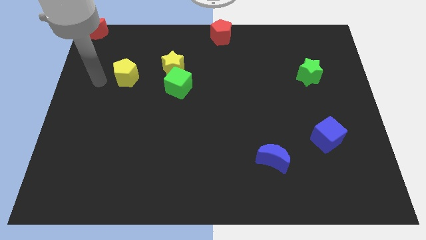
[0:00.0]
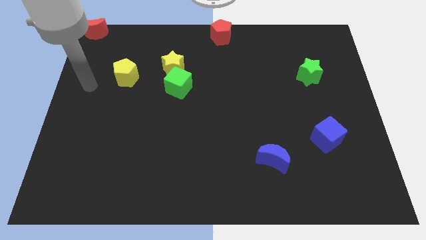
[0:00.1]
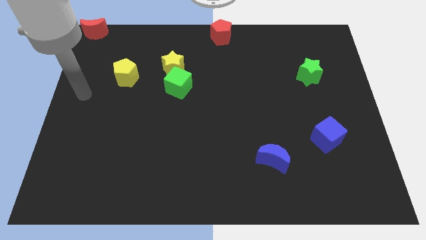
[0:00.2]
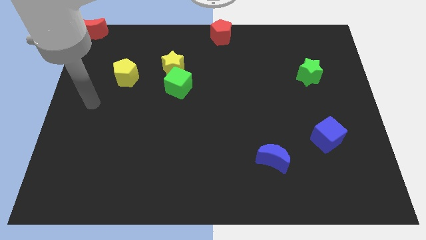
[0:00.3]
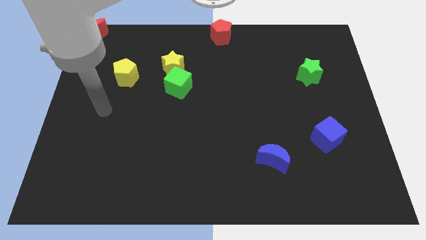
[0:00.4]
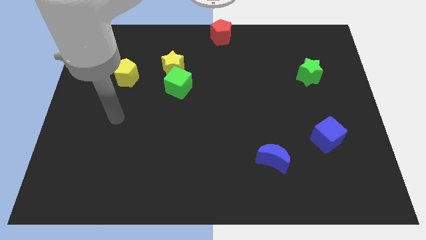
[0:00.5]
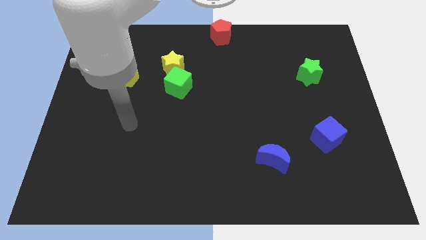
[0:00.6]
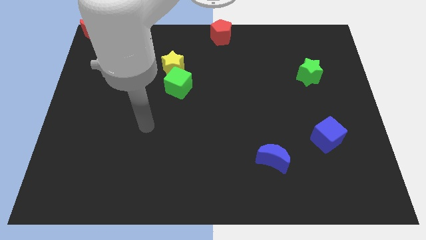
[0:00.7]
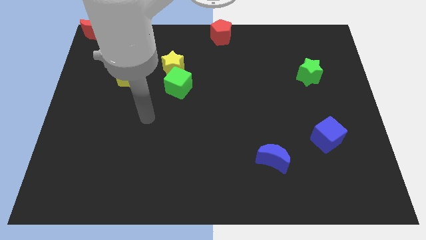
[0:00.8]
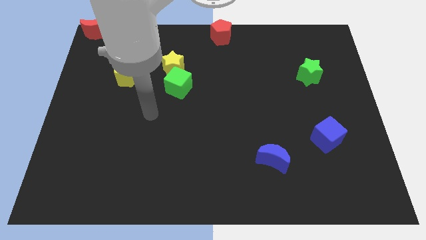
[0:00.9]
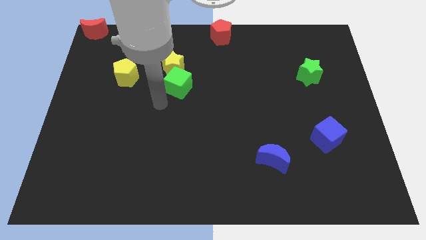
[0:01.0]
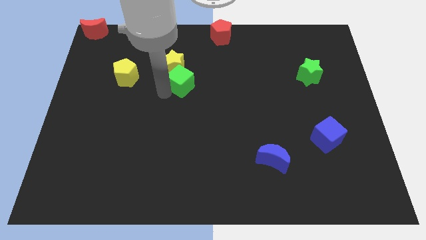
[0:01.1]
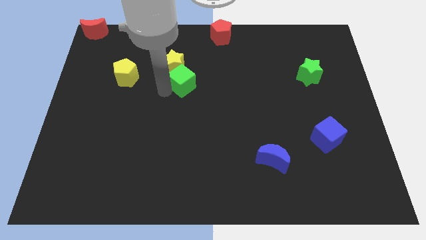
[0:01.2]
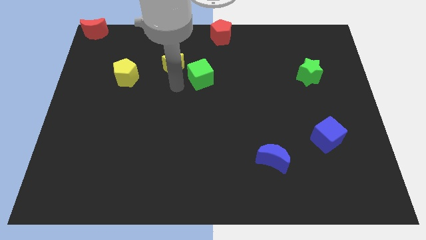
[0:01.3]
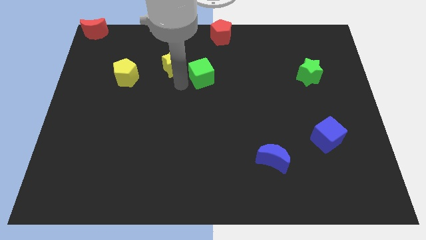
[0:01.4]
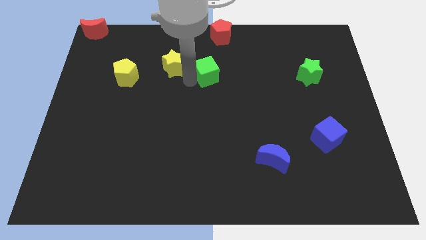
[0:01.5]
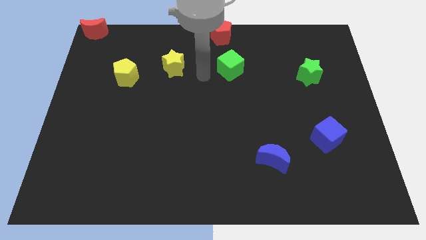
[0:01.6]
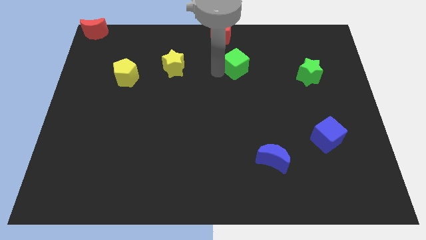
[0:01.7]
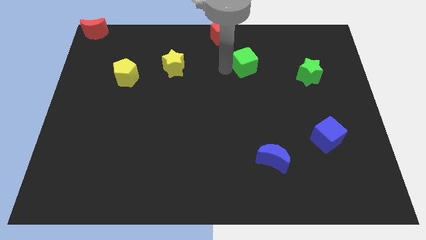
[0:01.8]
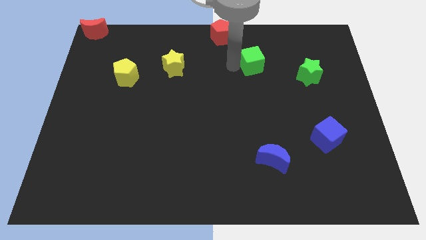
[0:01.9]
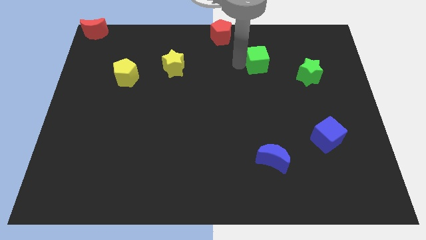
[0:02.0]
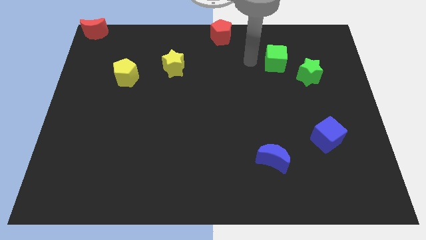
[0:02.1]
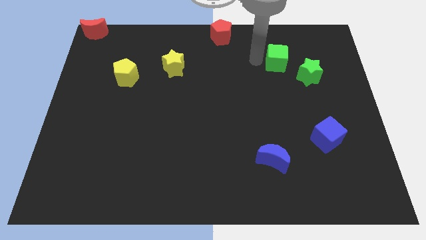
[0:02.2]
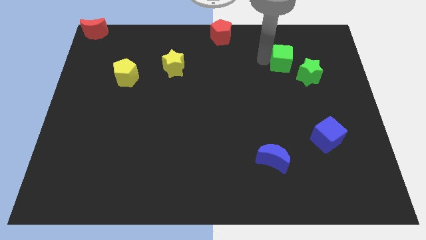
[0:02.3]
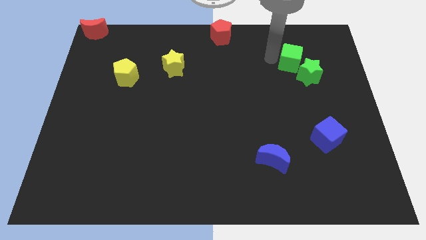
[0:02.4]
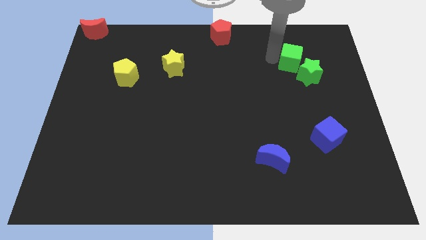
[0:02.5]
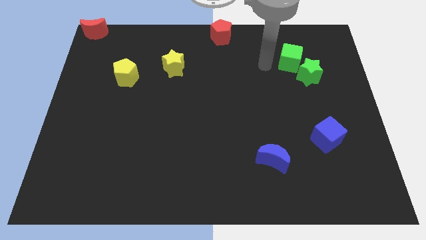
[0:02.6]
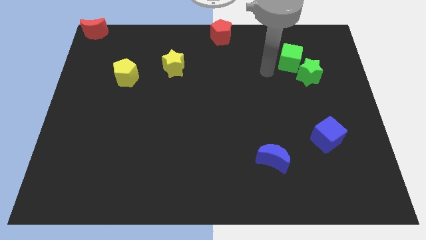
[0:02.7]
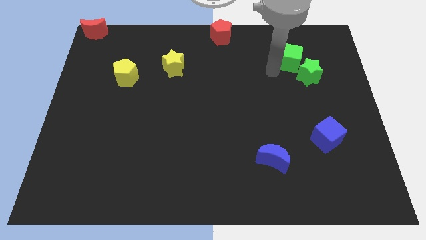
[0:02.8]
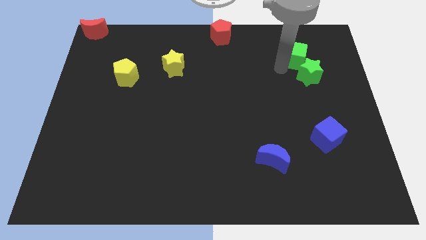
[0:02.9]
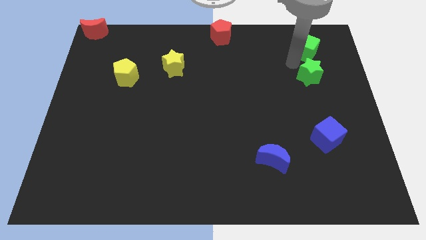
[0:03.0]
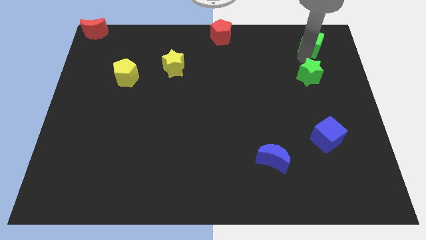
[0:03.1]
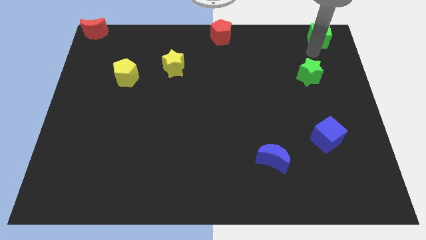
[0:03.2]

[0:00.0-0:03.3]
place the green cube above the green star

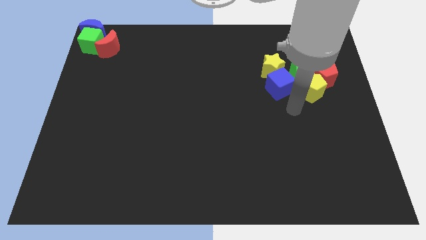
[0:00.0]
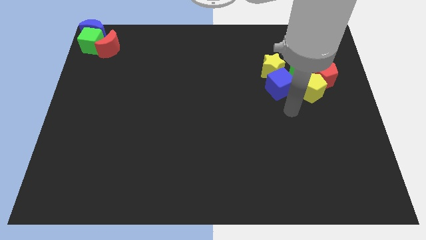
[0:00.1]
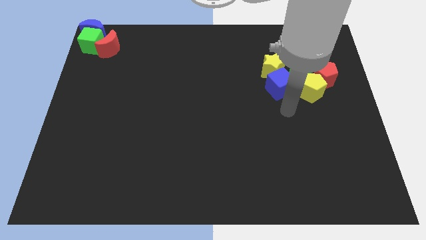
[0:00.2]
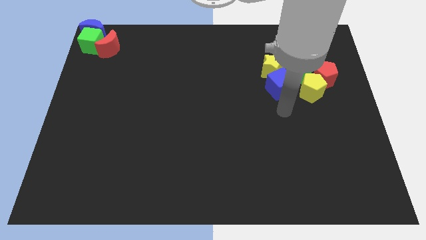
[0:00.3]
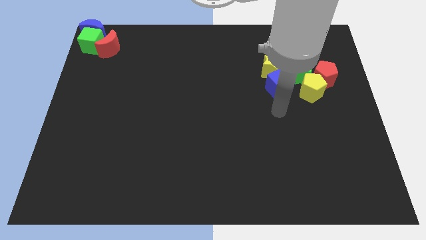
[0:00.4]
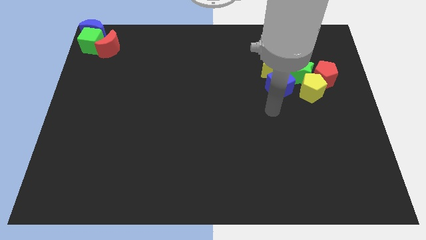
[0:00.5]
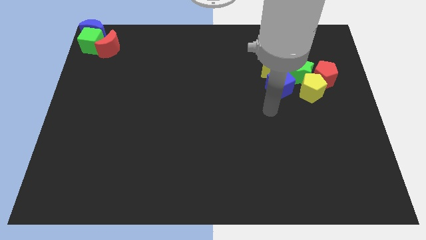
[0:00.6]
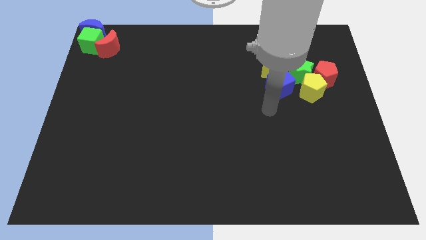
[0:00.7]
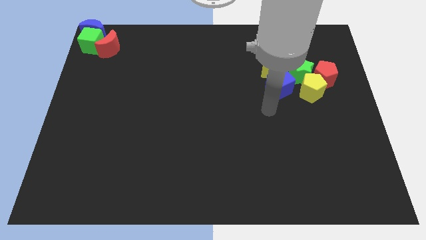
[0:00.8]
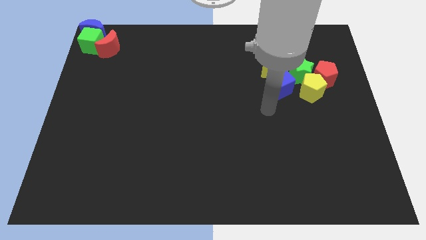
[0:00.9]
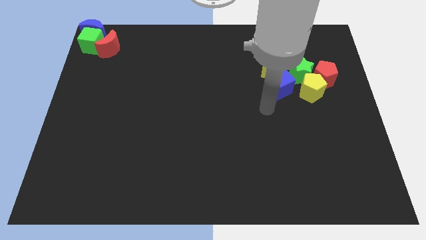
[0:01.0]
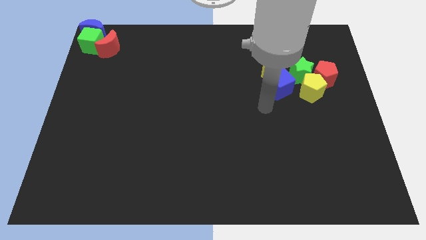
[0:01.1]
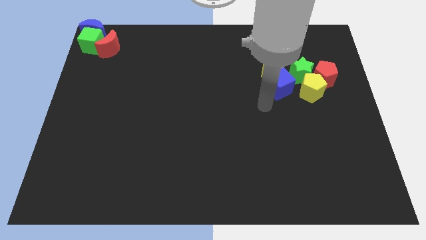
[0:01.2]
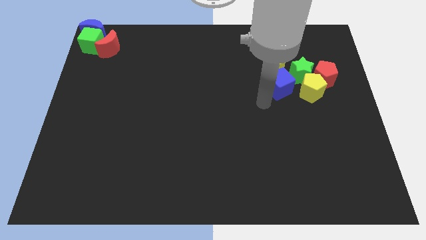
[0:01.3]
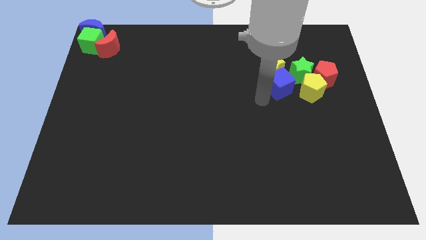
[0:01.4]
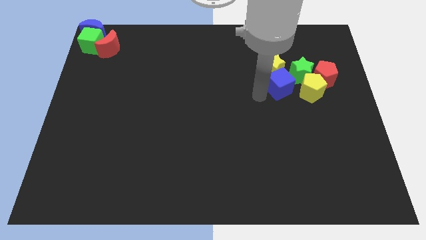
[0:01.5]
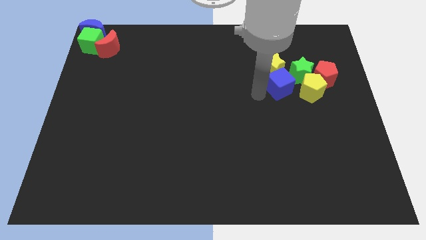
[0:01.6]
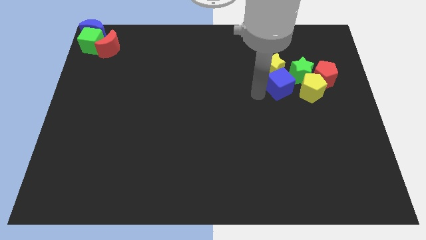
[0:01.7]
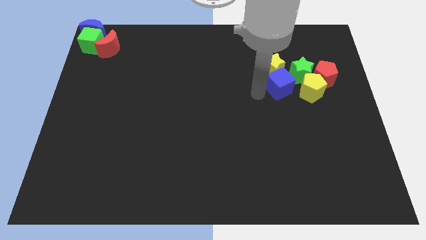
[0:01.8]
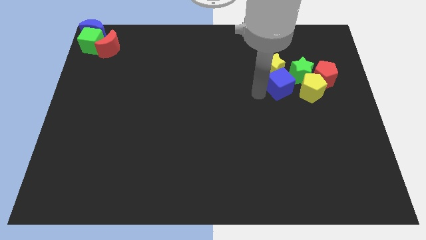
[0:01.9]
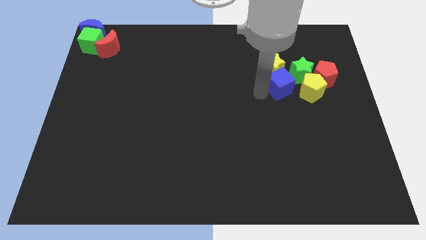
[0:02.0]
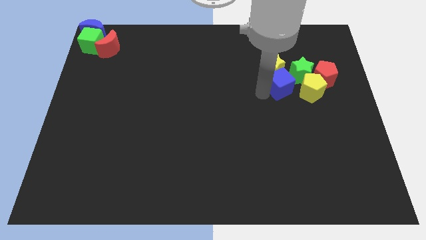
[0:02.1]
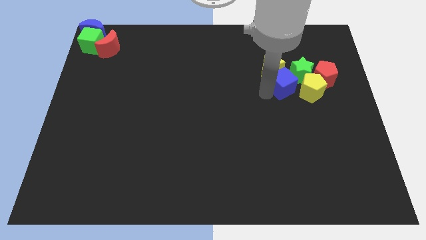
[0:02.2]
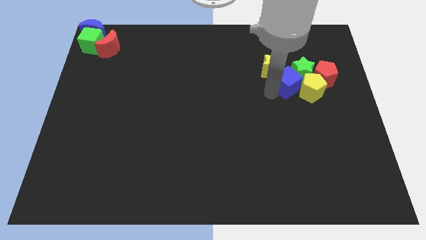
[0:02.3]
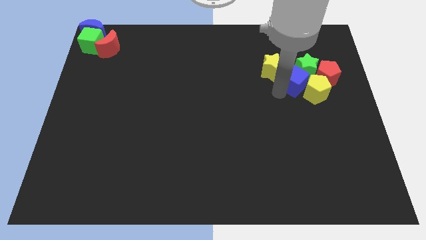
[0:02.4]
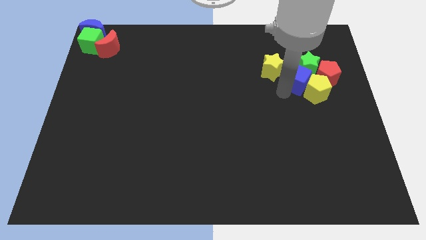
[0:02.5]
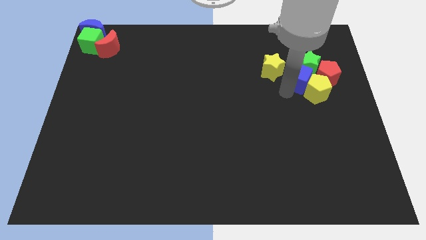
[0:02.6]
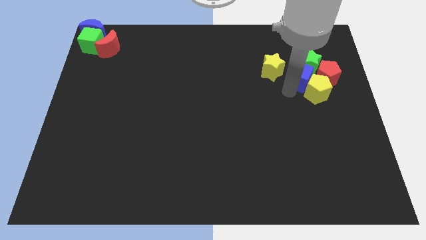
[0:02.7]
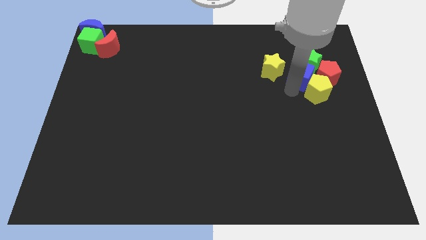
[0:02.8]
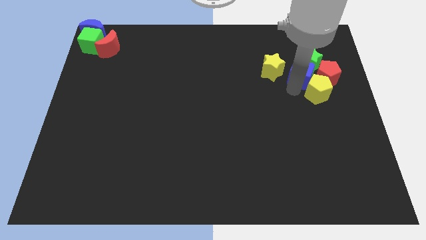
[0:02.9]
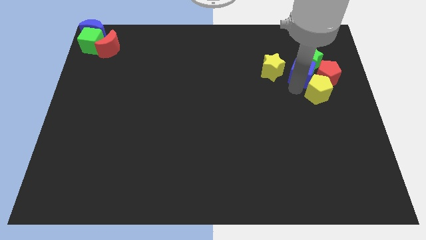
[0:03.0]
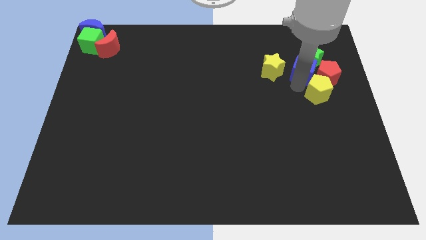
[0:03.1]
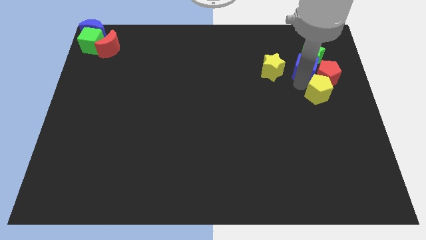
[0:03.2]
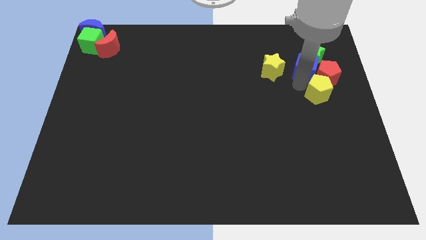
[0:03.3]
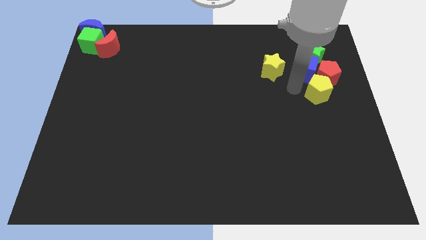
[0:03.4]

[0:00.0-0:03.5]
push the blue cube and green star towards the top side of the board

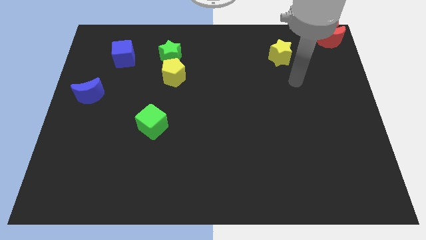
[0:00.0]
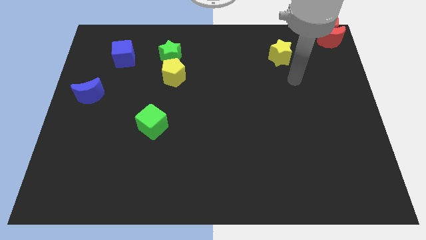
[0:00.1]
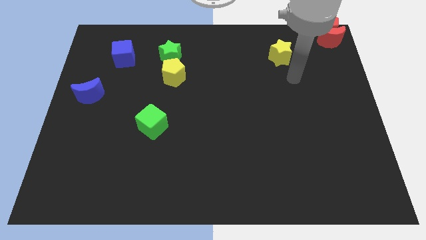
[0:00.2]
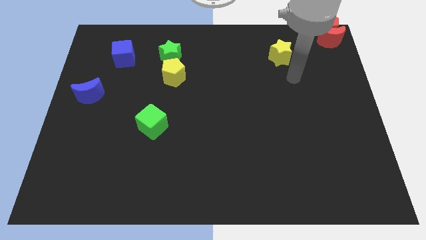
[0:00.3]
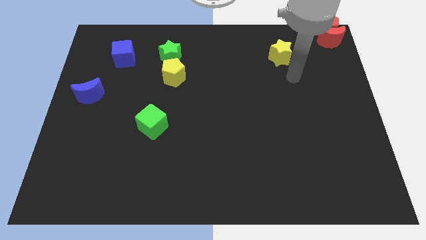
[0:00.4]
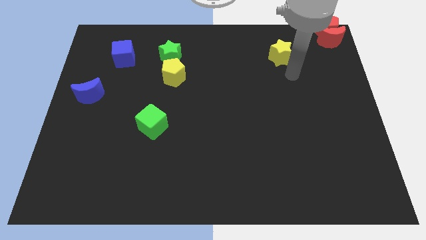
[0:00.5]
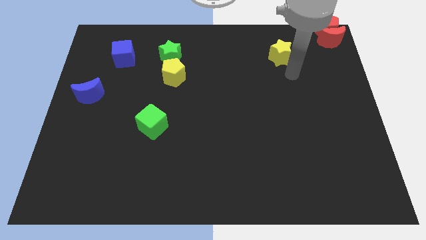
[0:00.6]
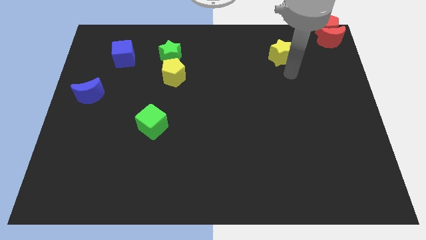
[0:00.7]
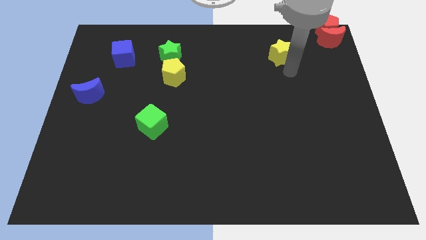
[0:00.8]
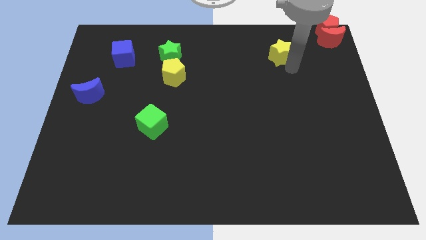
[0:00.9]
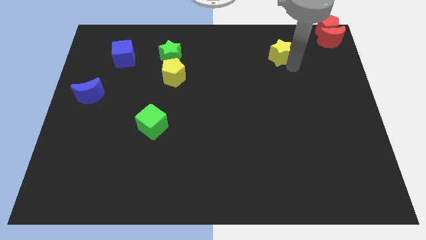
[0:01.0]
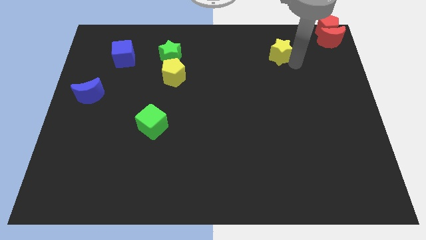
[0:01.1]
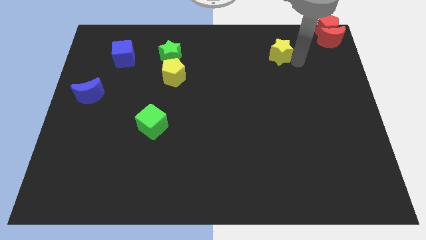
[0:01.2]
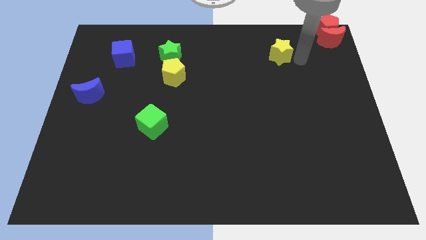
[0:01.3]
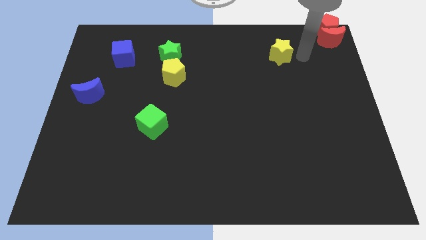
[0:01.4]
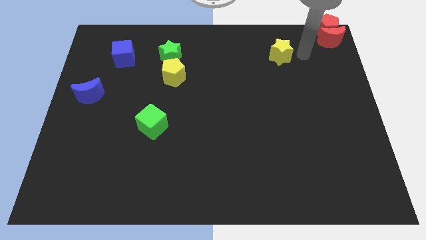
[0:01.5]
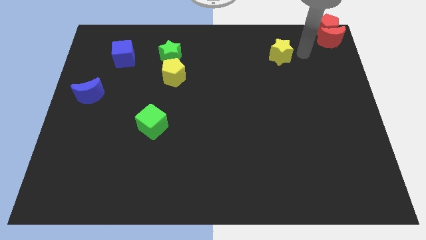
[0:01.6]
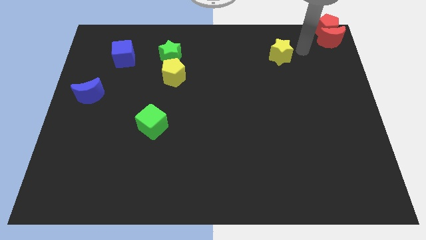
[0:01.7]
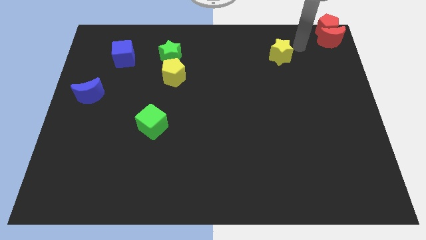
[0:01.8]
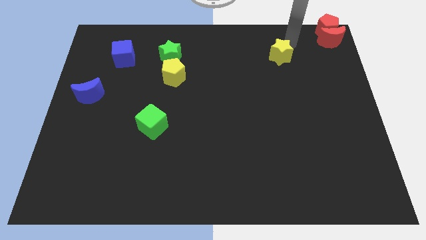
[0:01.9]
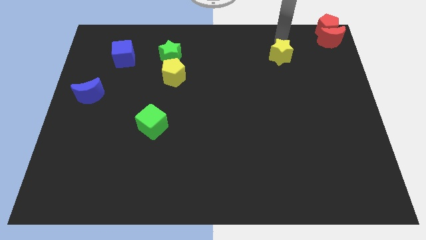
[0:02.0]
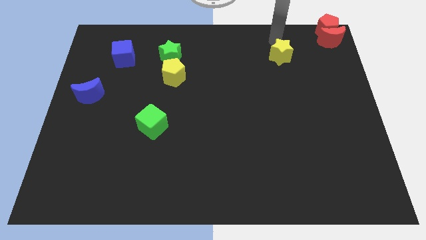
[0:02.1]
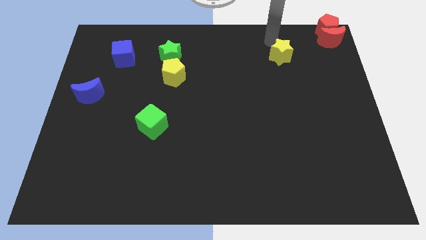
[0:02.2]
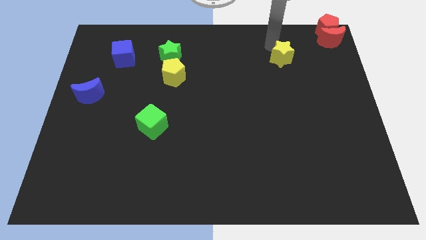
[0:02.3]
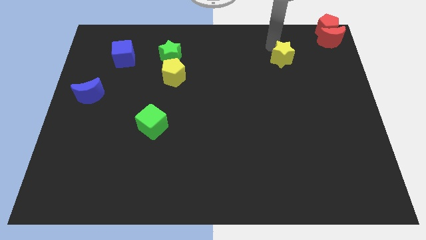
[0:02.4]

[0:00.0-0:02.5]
move your arm towards the yellow star
